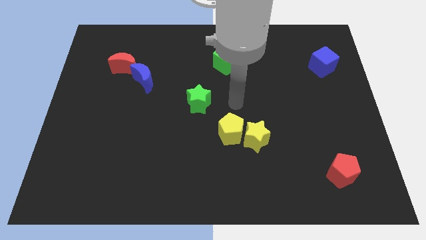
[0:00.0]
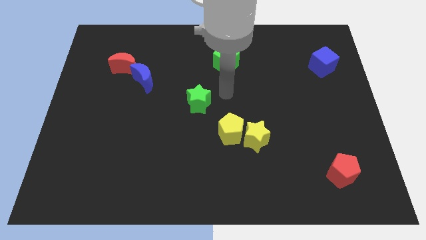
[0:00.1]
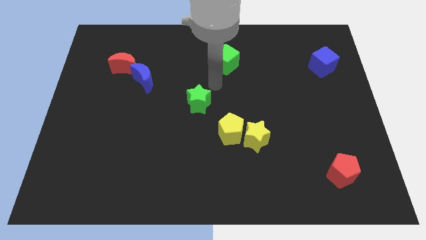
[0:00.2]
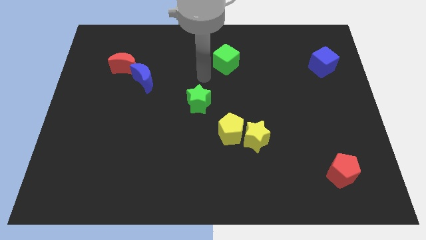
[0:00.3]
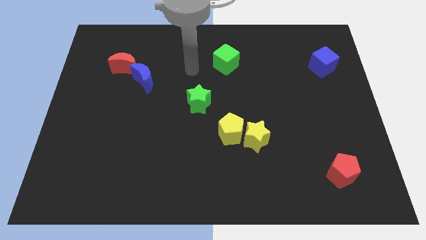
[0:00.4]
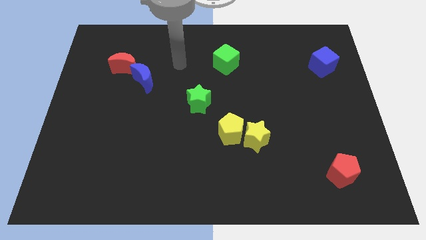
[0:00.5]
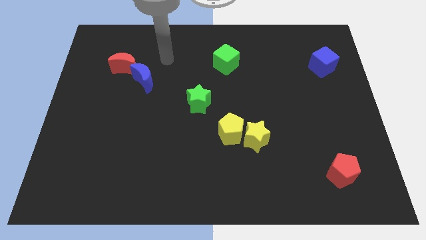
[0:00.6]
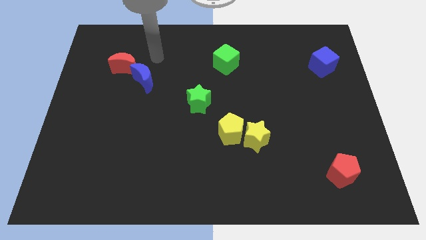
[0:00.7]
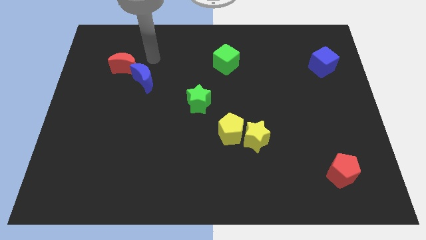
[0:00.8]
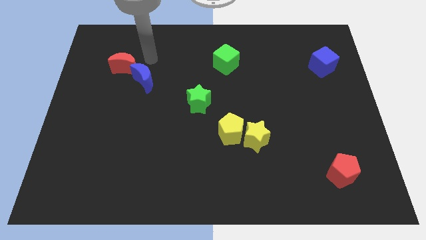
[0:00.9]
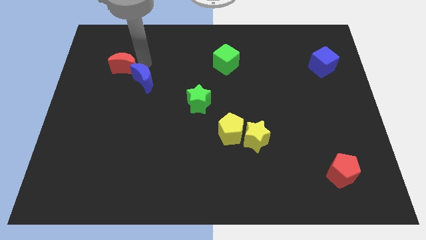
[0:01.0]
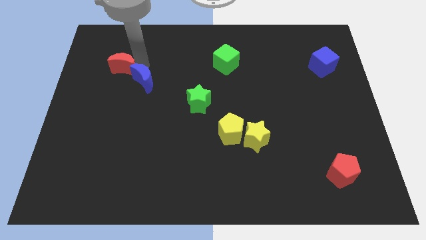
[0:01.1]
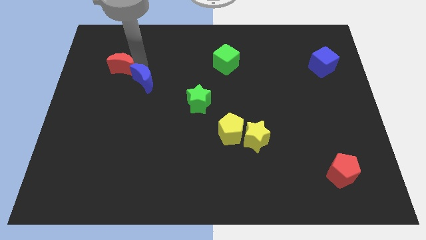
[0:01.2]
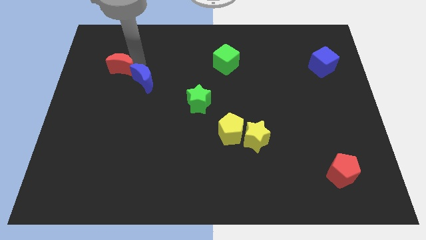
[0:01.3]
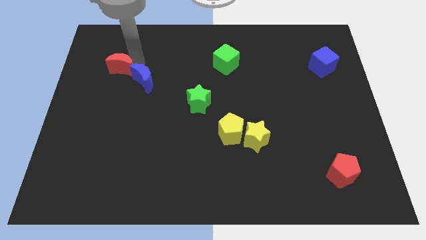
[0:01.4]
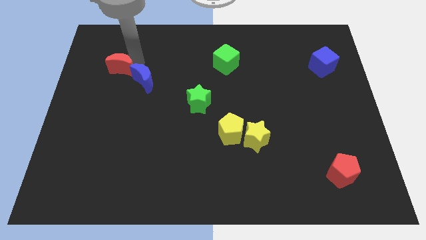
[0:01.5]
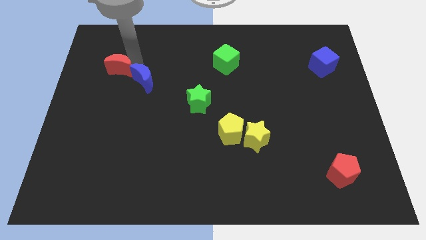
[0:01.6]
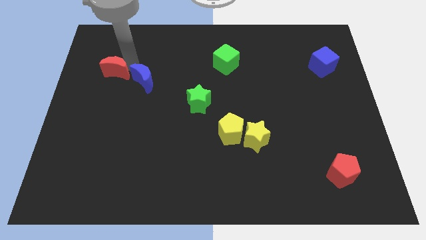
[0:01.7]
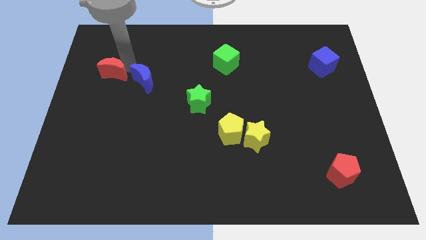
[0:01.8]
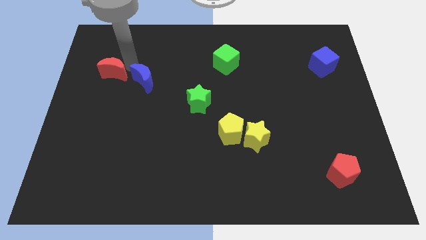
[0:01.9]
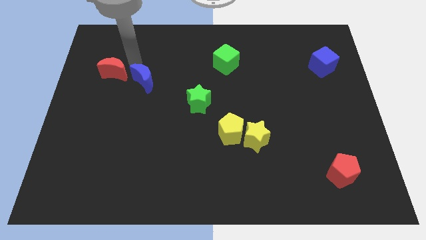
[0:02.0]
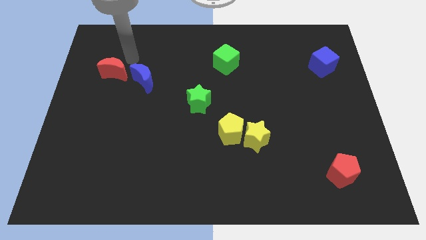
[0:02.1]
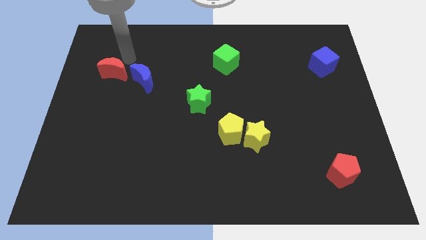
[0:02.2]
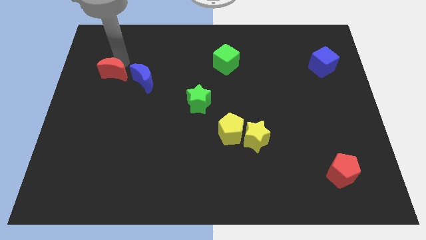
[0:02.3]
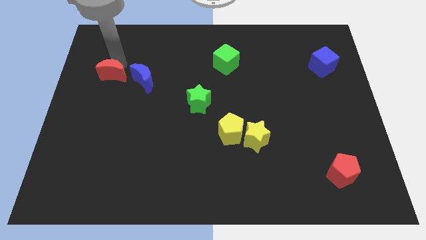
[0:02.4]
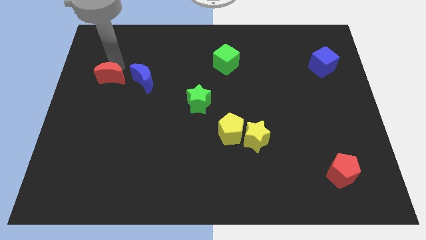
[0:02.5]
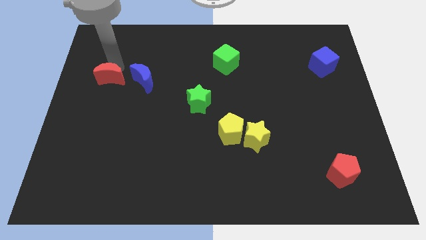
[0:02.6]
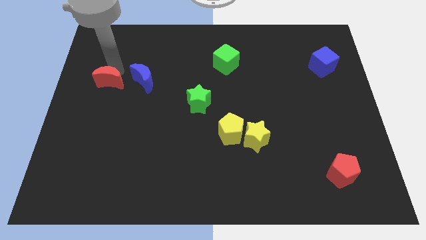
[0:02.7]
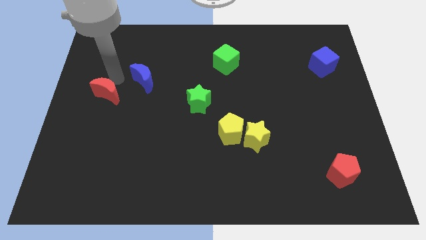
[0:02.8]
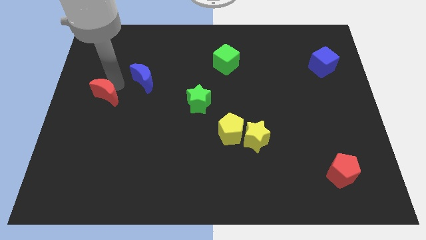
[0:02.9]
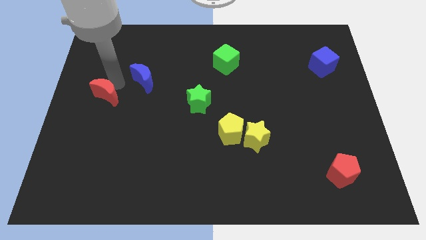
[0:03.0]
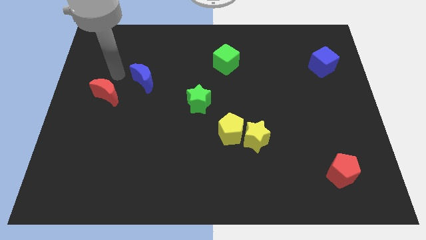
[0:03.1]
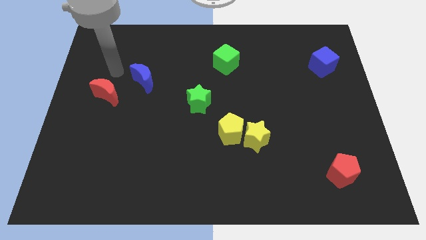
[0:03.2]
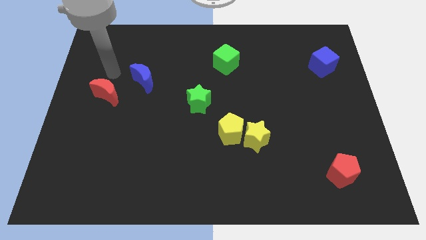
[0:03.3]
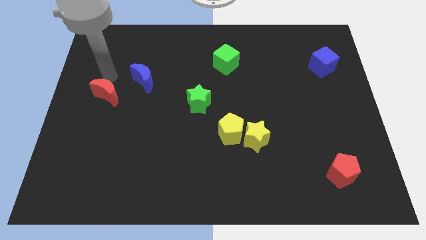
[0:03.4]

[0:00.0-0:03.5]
separate the red crescent from the blue crescent

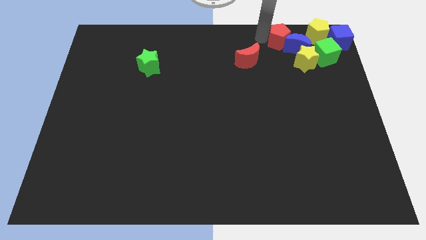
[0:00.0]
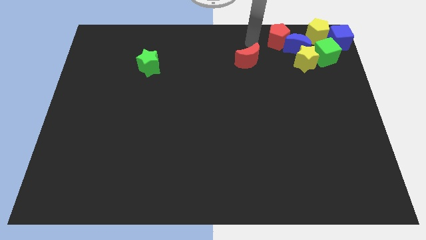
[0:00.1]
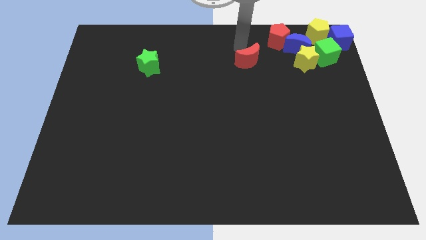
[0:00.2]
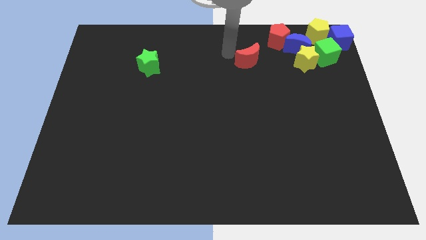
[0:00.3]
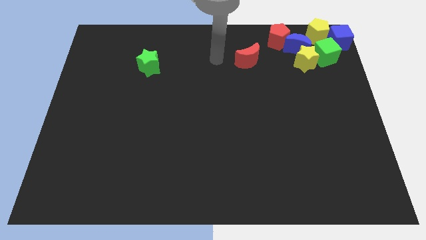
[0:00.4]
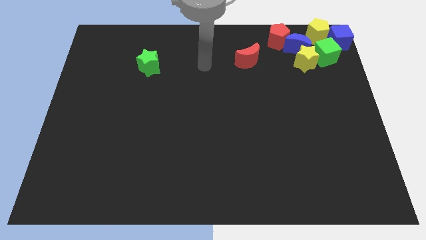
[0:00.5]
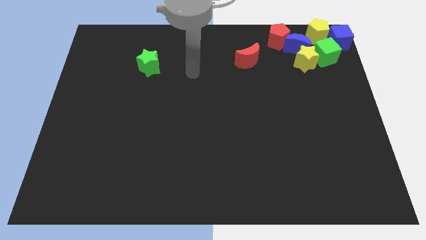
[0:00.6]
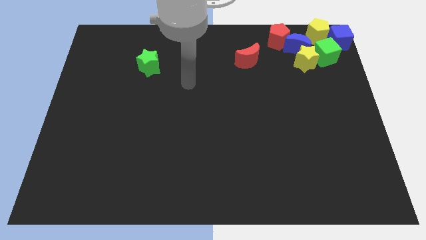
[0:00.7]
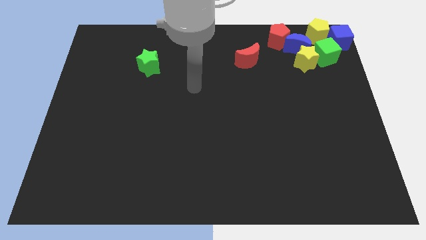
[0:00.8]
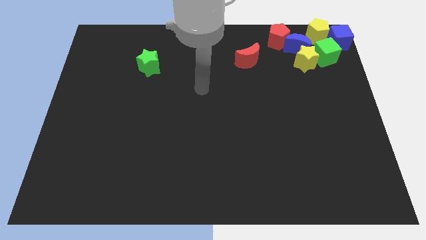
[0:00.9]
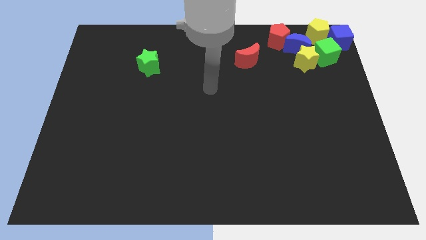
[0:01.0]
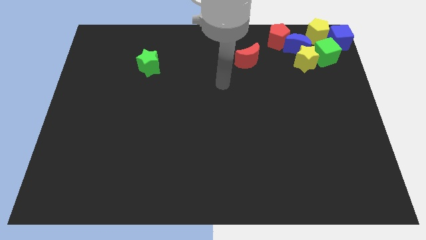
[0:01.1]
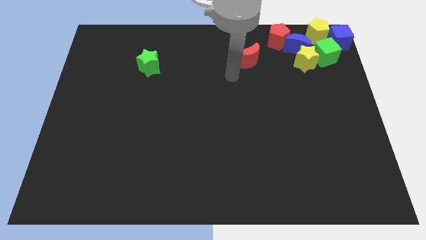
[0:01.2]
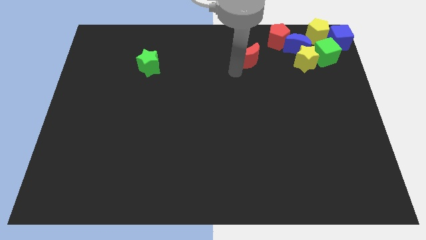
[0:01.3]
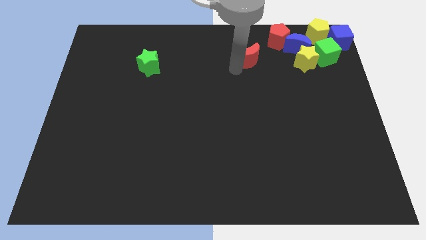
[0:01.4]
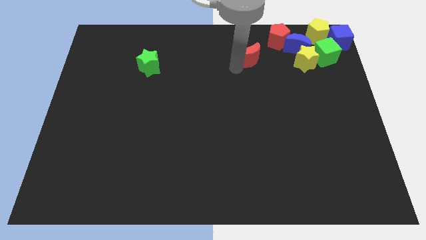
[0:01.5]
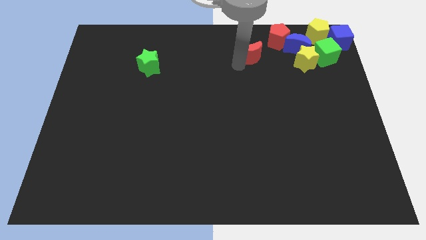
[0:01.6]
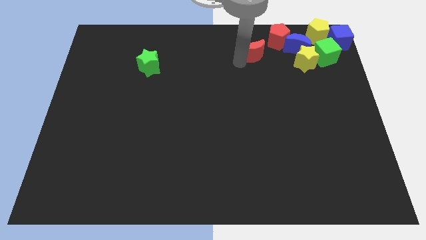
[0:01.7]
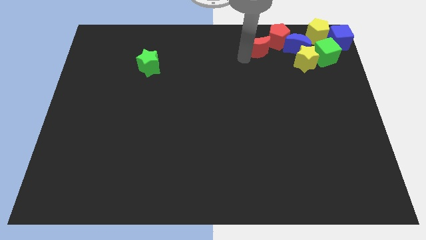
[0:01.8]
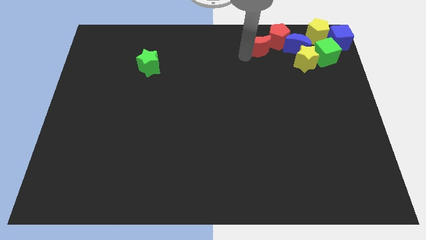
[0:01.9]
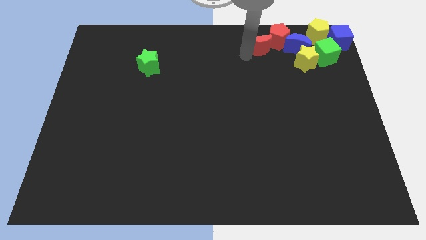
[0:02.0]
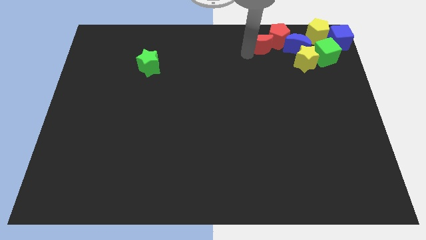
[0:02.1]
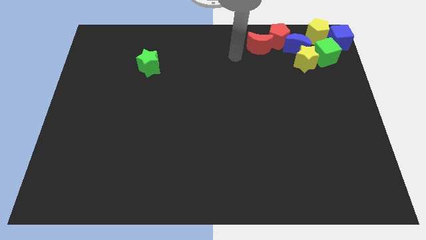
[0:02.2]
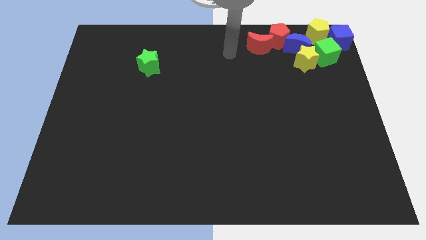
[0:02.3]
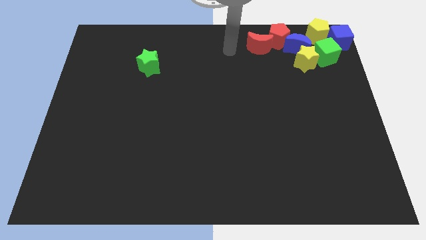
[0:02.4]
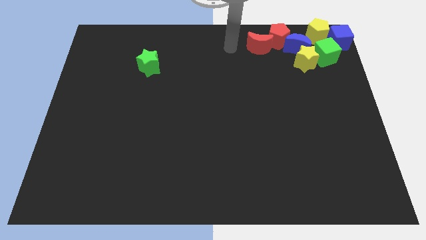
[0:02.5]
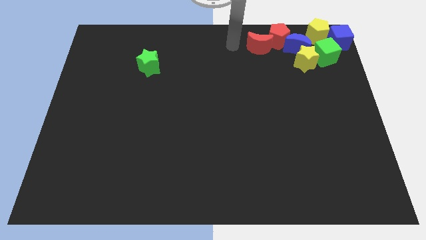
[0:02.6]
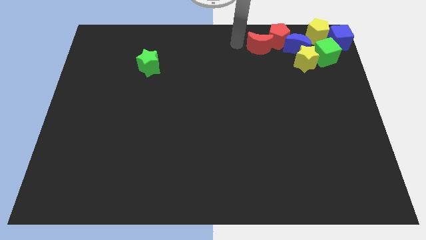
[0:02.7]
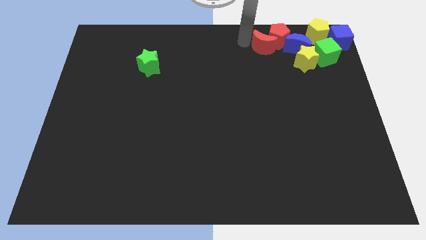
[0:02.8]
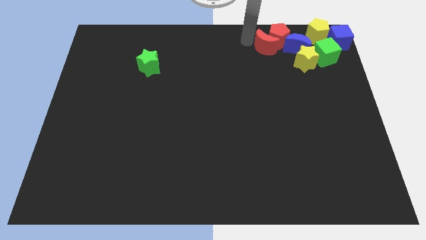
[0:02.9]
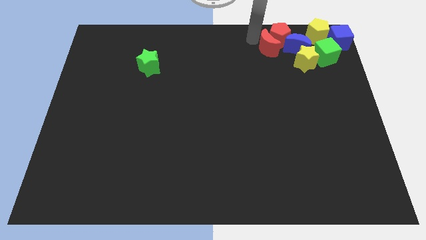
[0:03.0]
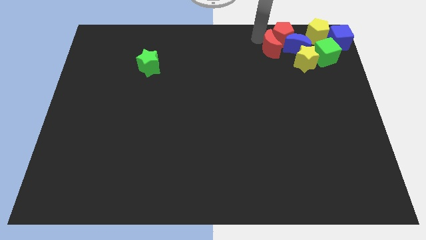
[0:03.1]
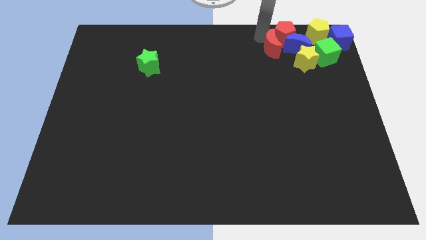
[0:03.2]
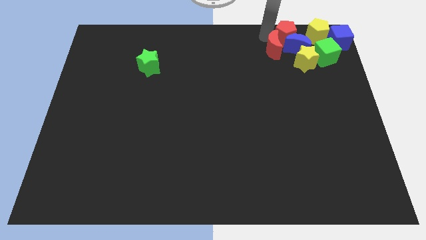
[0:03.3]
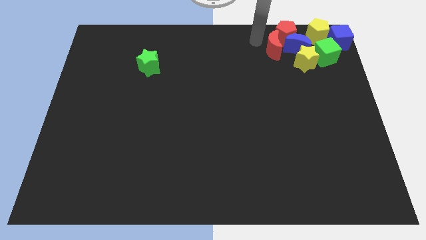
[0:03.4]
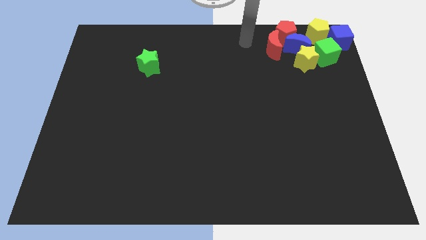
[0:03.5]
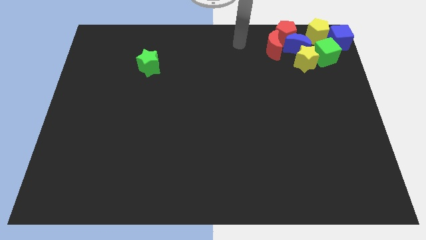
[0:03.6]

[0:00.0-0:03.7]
push the red crescent into the red pentagon

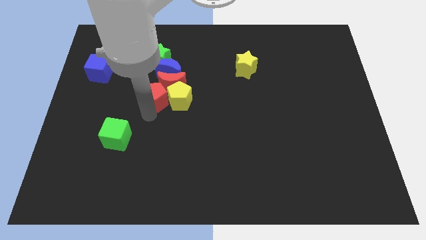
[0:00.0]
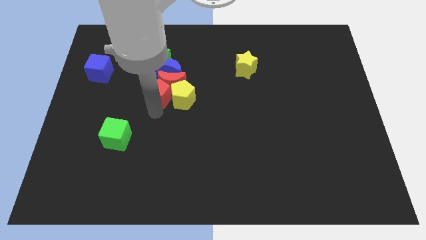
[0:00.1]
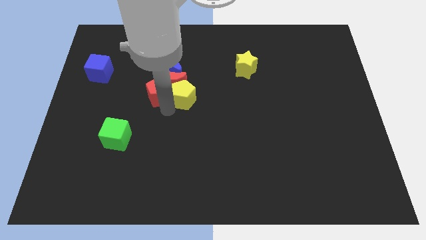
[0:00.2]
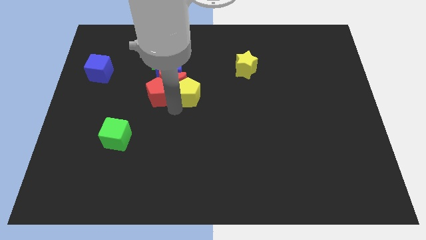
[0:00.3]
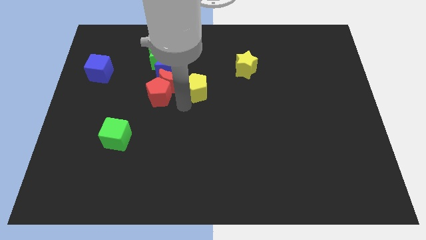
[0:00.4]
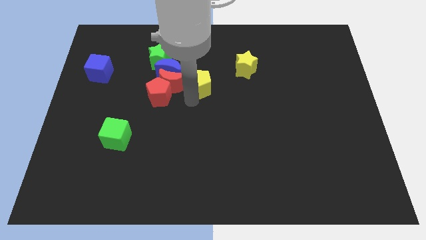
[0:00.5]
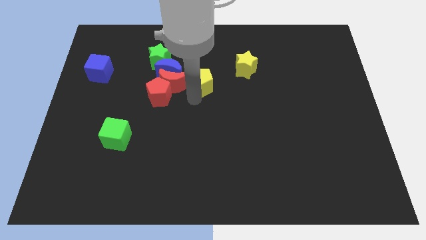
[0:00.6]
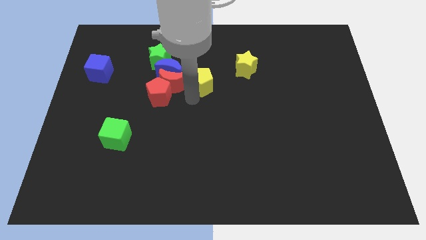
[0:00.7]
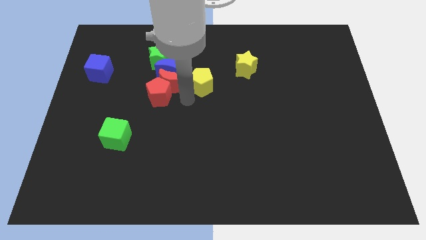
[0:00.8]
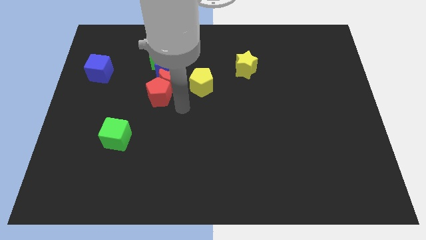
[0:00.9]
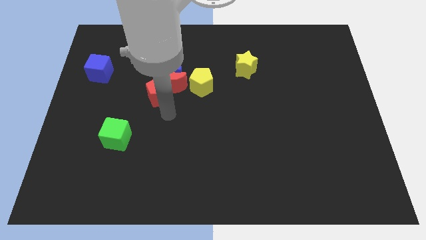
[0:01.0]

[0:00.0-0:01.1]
move the yellow pentagon to the right of the red crescent

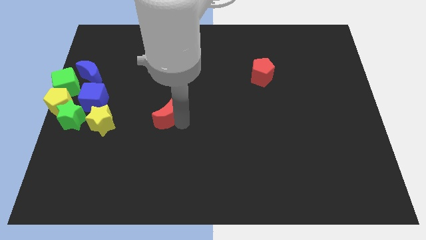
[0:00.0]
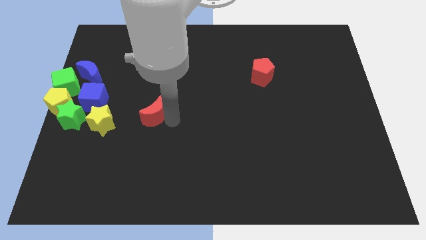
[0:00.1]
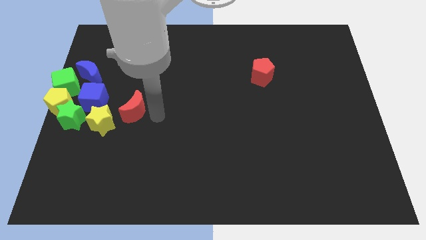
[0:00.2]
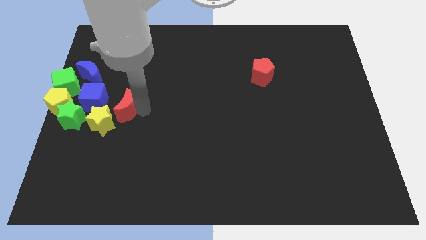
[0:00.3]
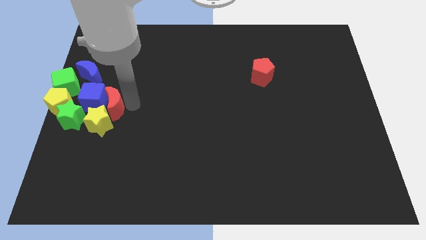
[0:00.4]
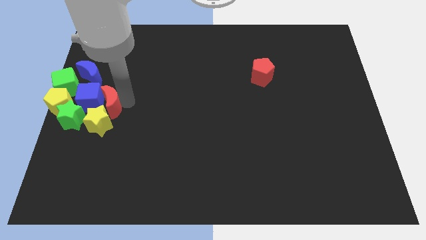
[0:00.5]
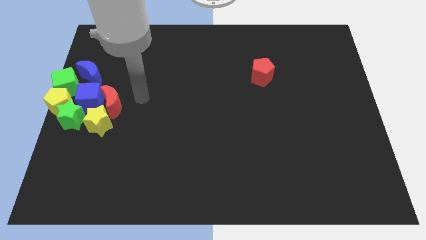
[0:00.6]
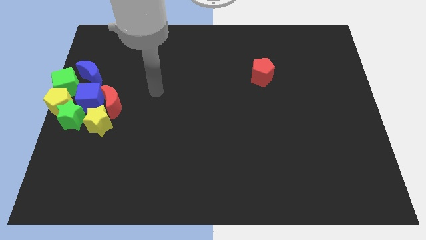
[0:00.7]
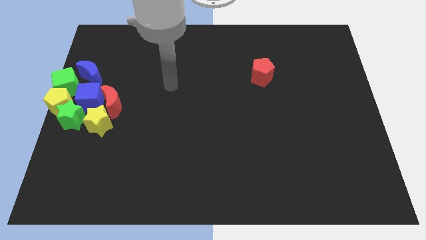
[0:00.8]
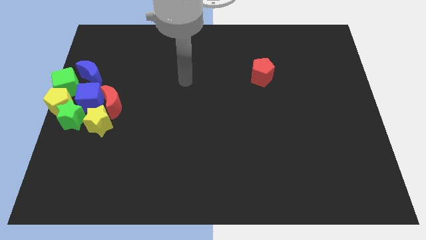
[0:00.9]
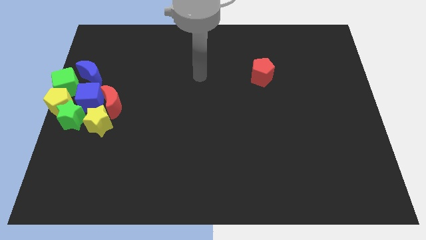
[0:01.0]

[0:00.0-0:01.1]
push the red crescent into the blue cube
